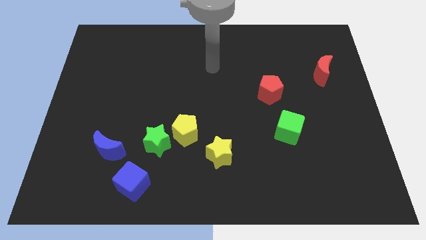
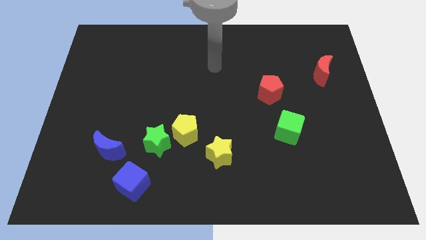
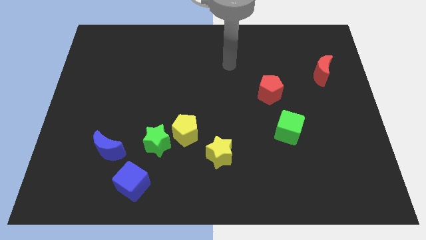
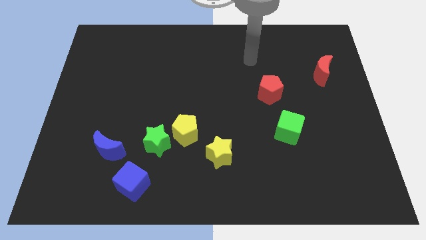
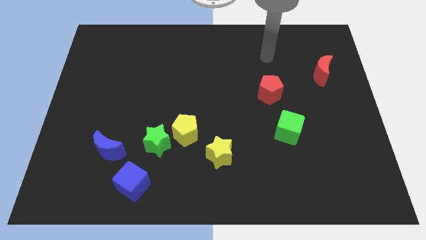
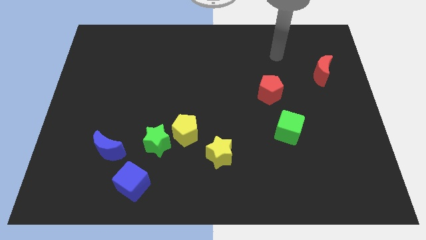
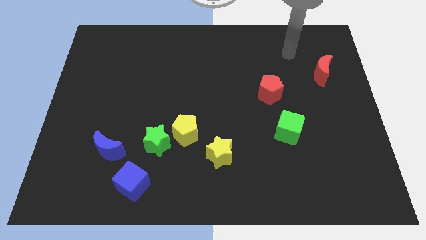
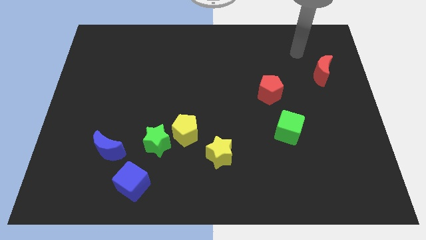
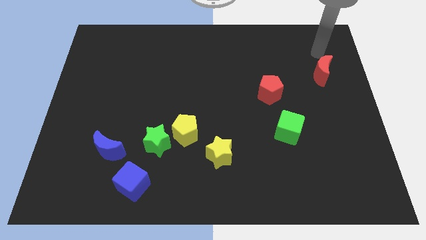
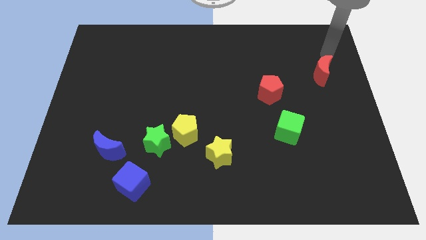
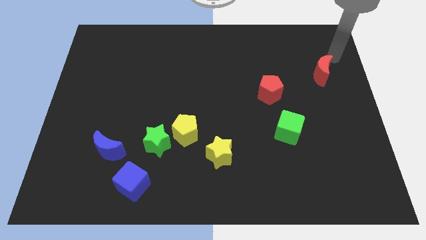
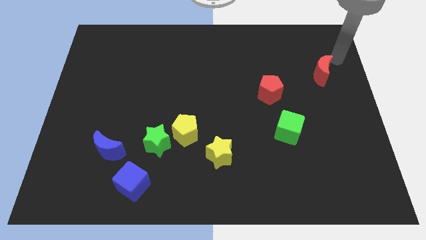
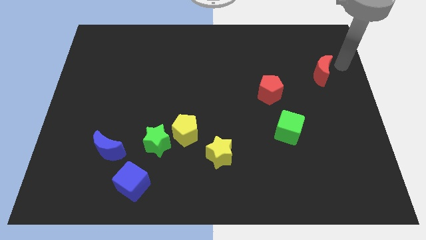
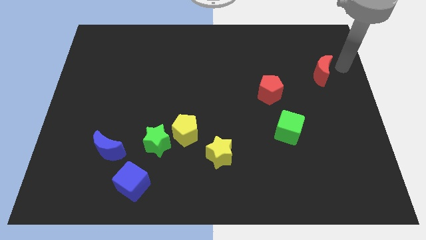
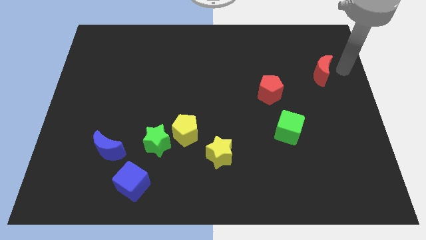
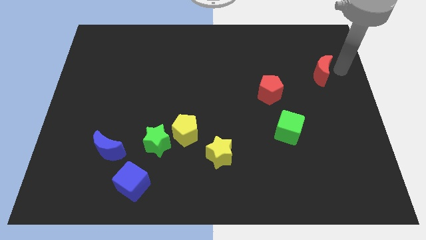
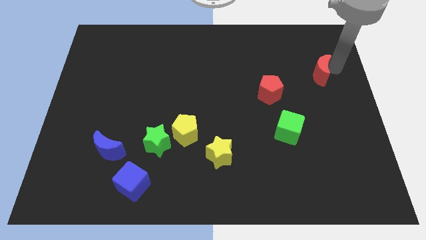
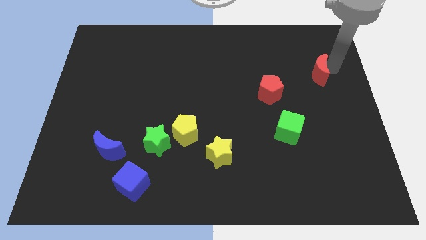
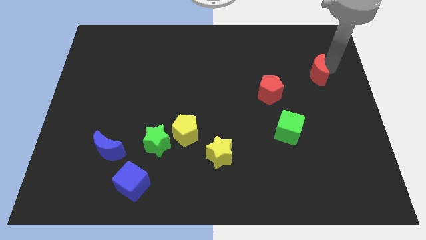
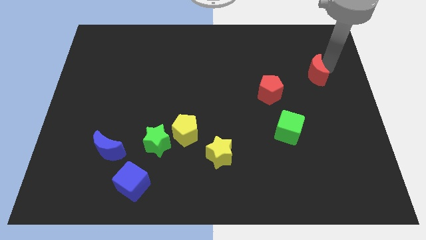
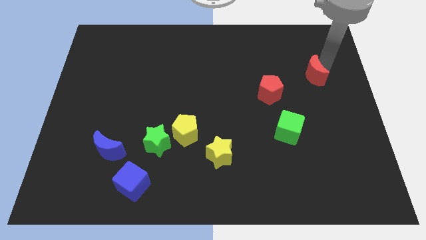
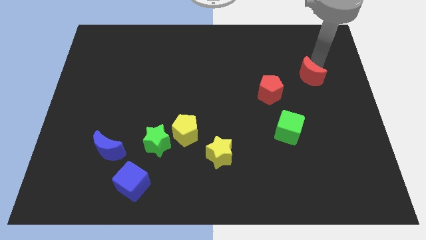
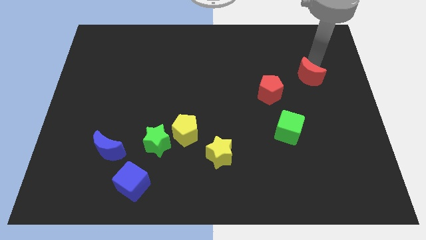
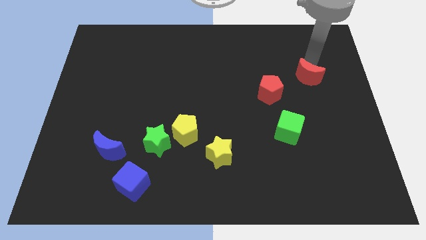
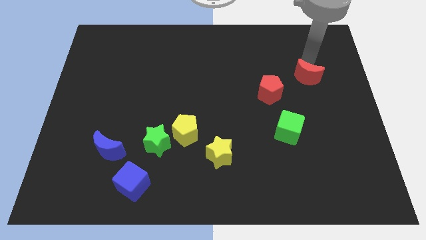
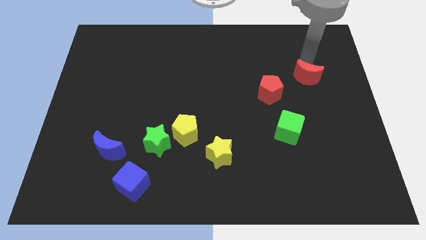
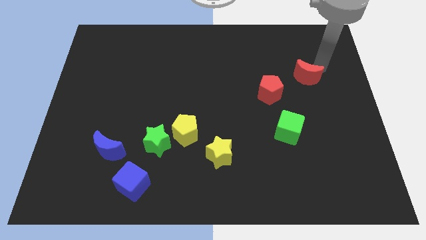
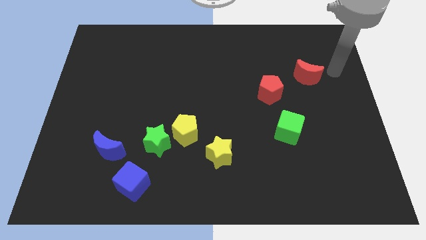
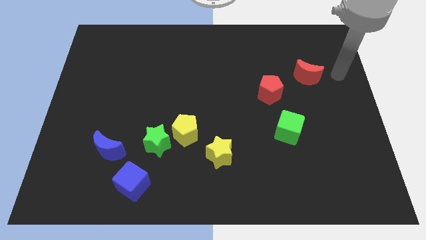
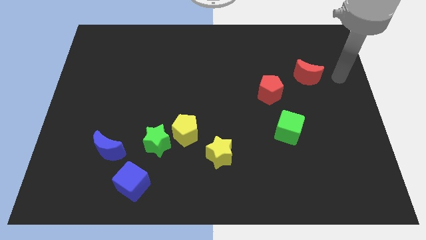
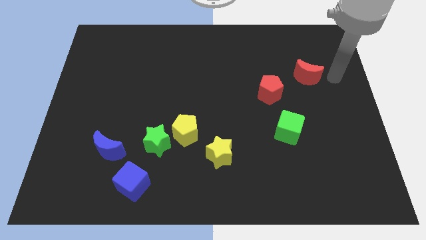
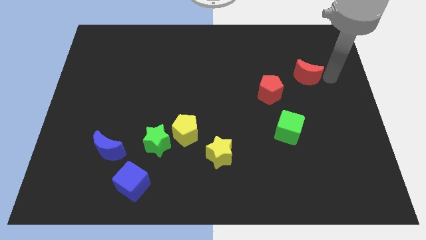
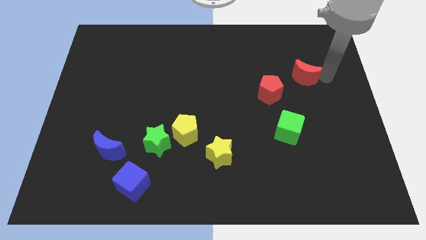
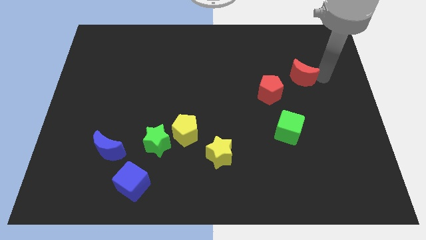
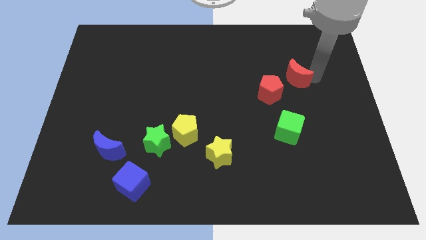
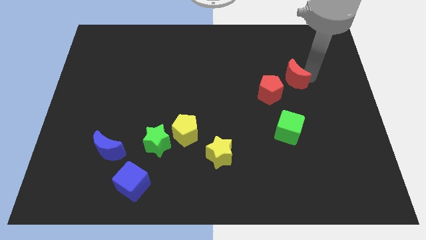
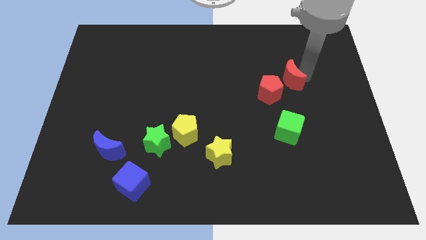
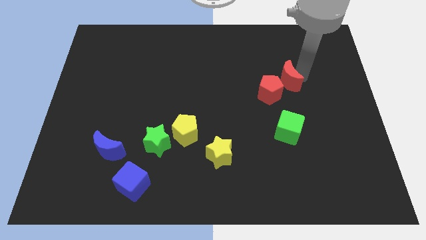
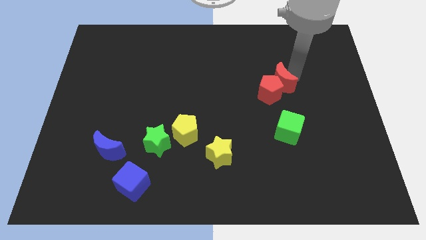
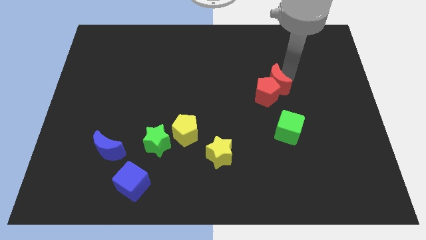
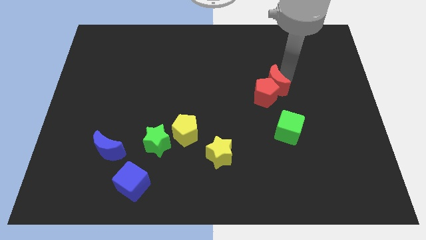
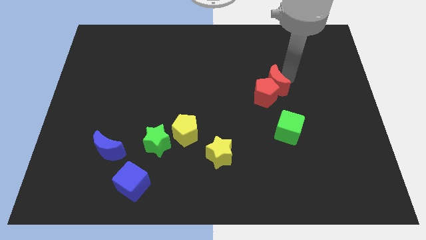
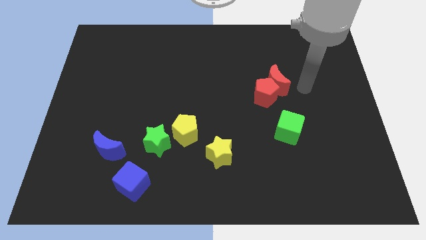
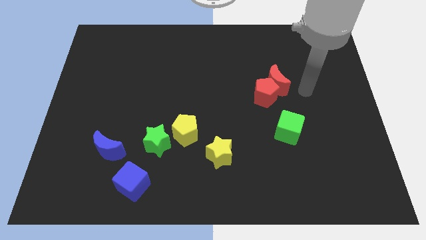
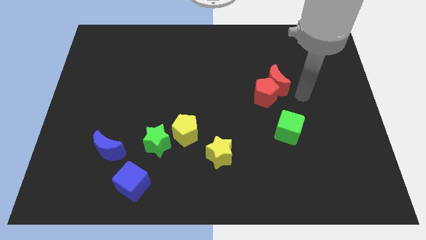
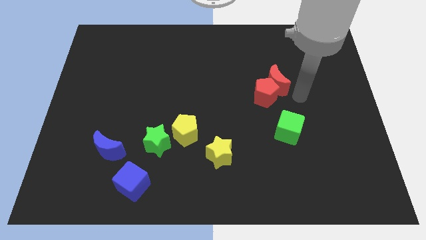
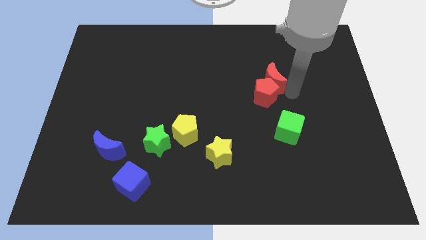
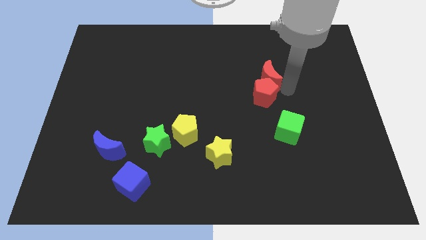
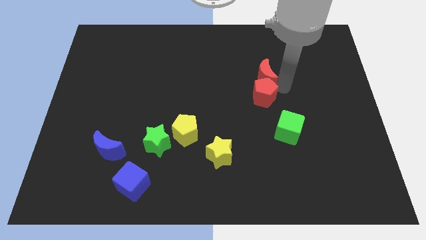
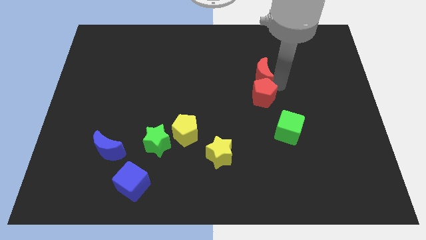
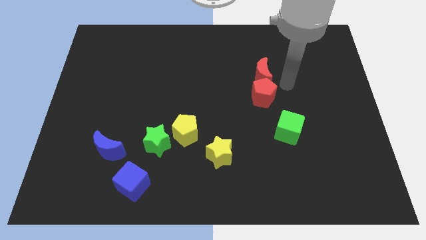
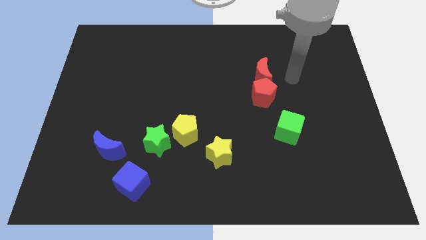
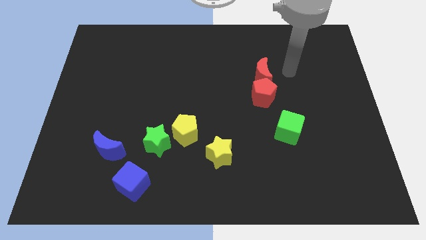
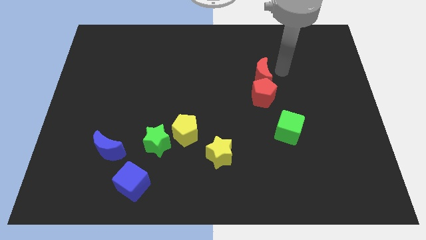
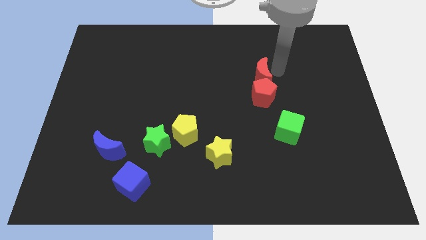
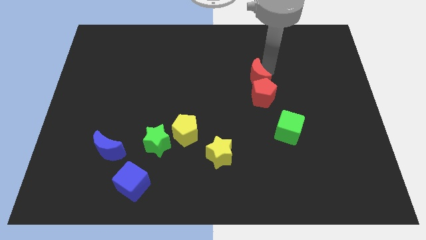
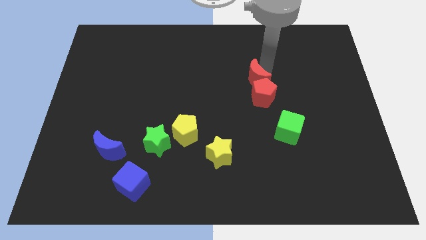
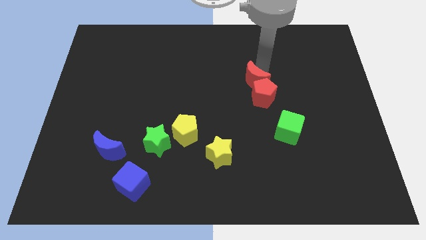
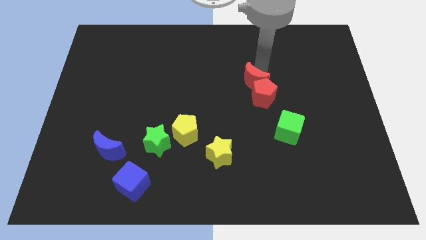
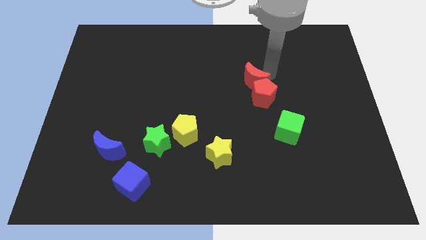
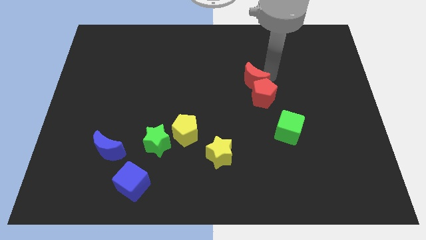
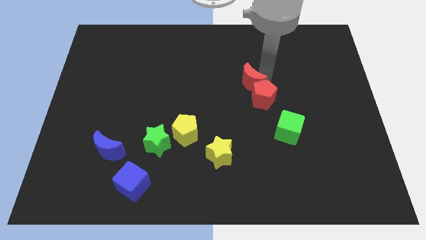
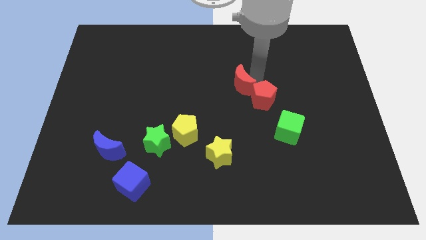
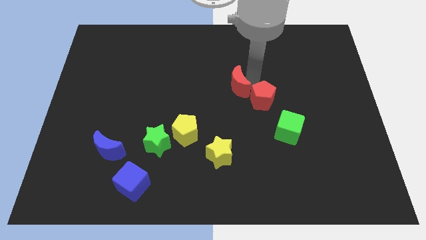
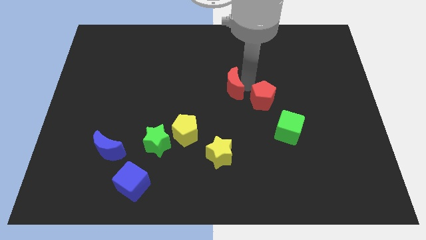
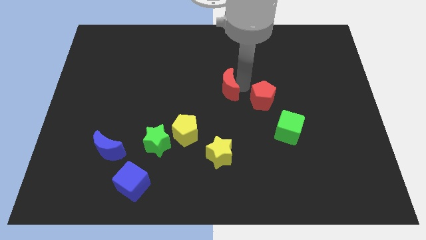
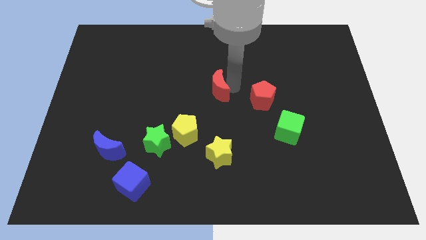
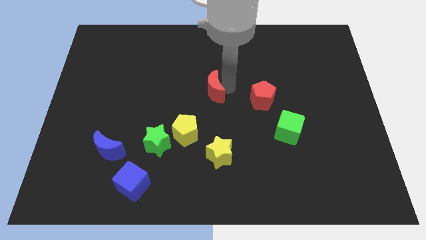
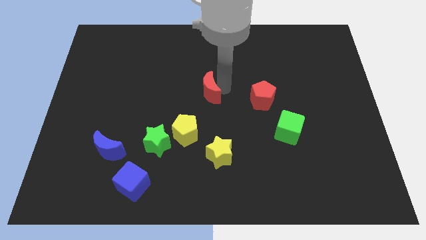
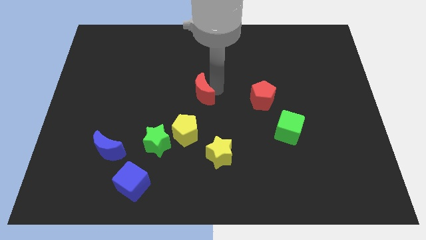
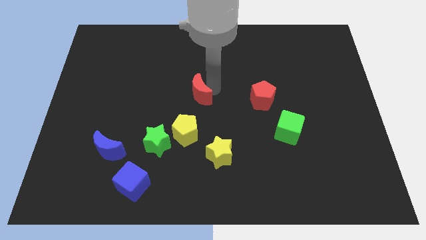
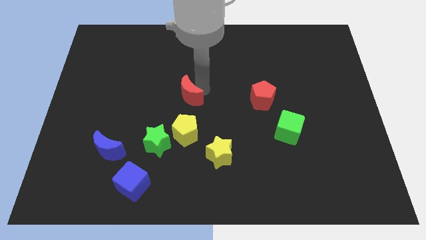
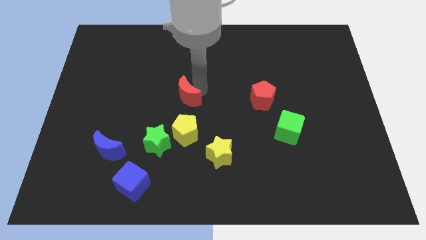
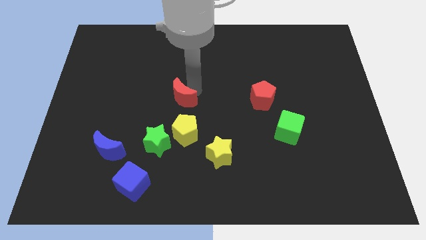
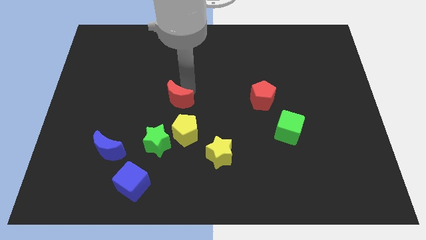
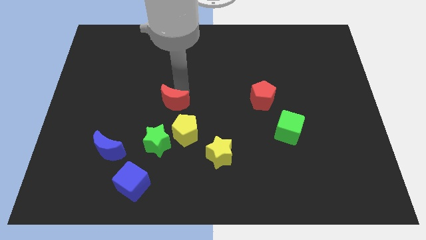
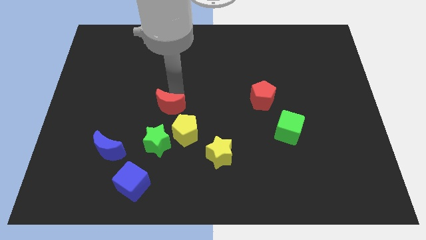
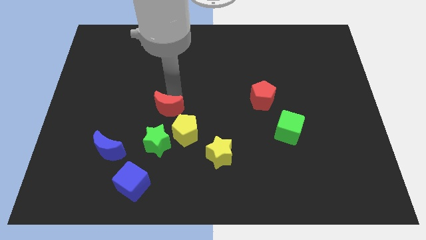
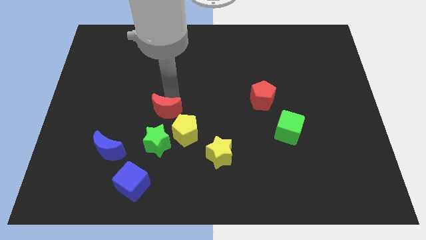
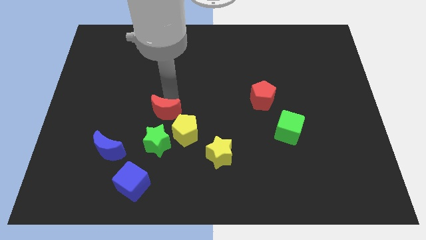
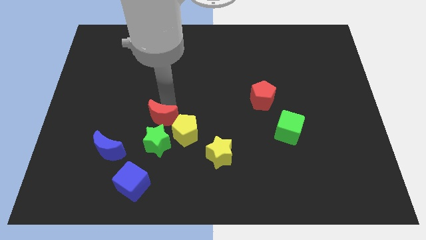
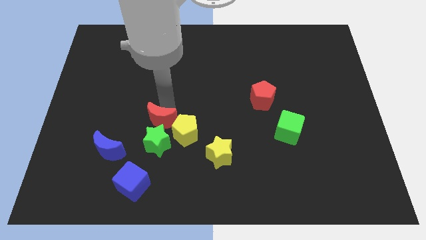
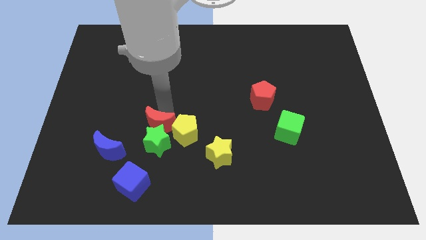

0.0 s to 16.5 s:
slide the red moon to the green star
